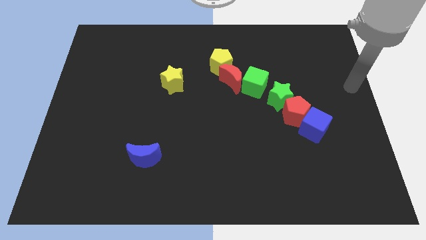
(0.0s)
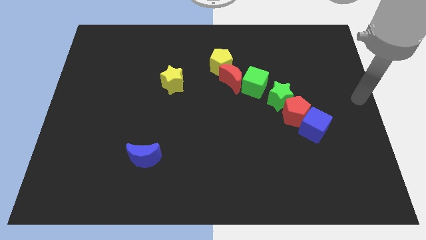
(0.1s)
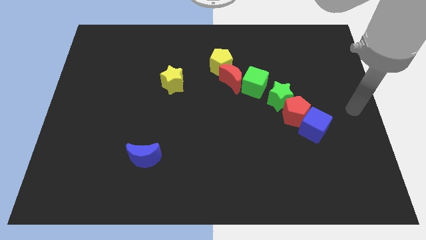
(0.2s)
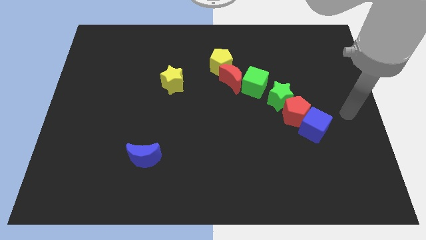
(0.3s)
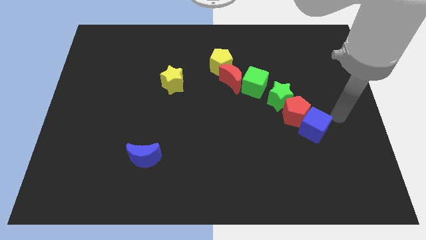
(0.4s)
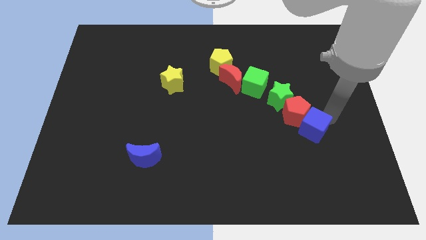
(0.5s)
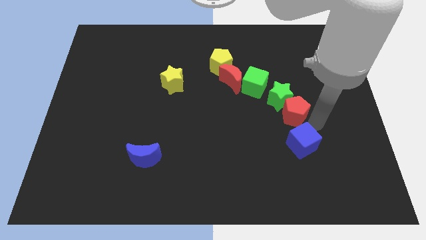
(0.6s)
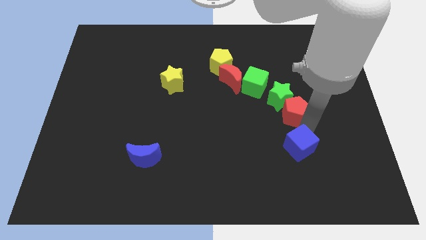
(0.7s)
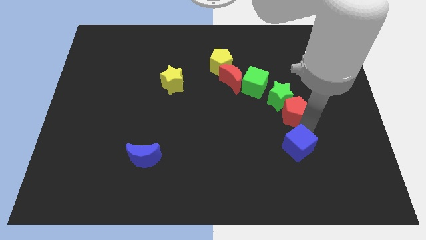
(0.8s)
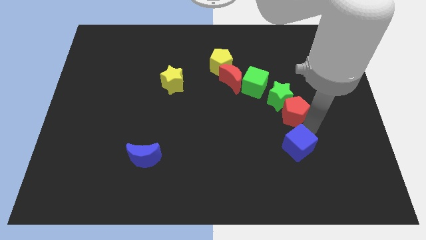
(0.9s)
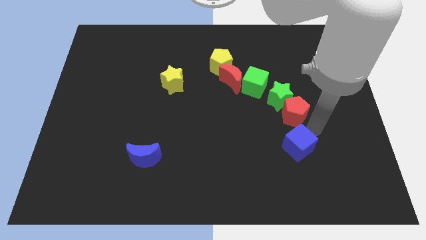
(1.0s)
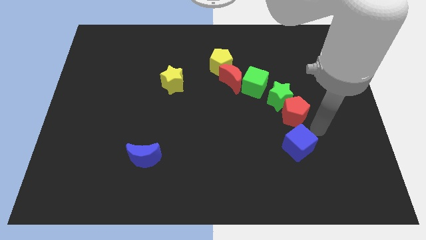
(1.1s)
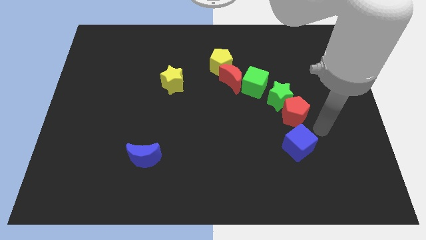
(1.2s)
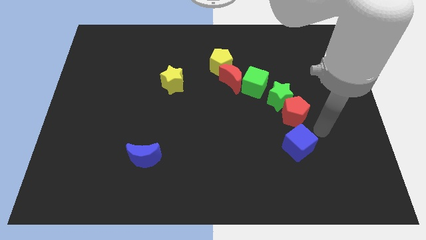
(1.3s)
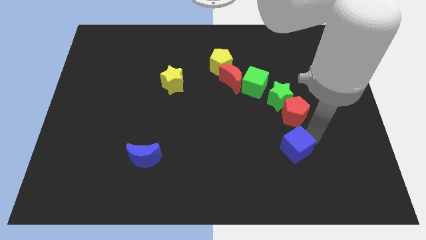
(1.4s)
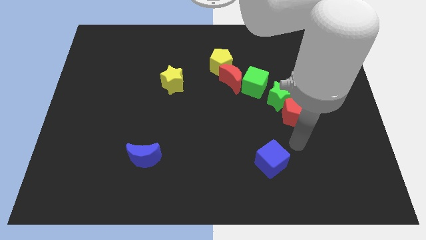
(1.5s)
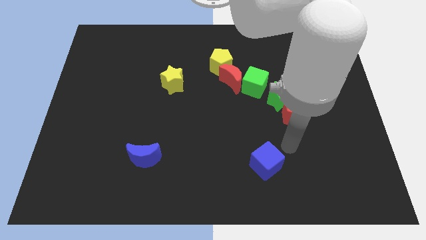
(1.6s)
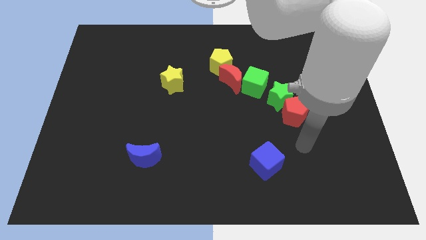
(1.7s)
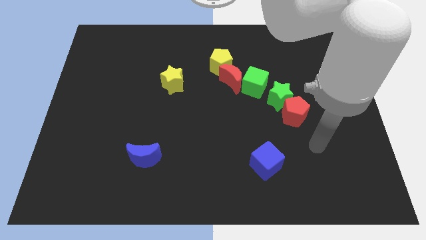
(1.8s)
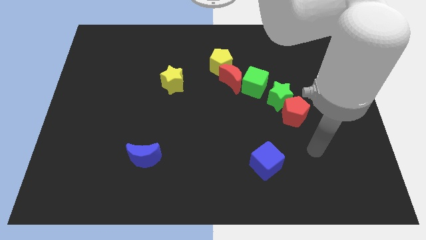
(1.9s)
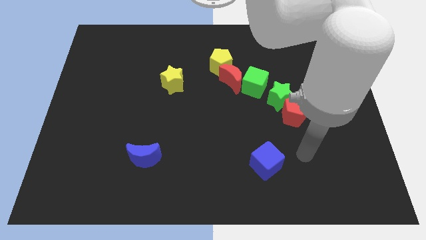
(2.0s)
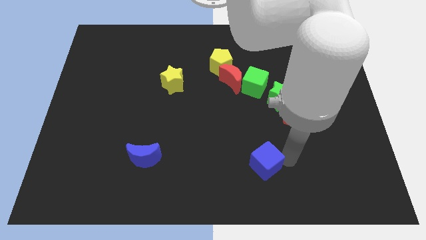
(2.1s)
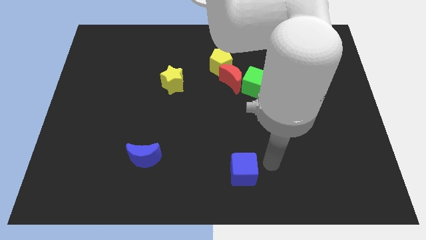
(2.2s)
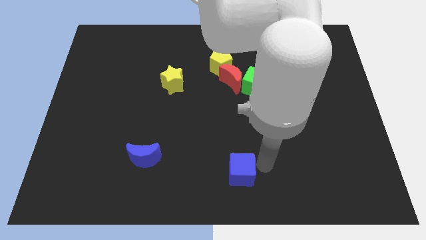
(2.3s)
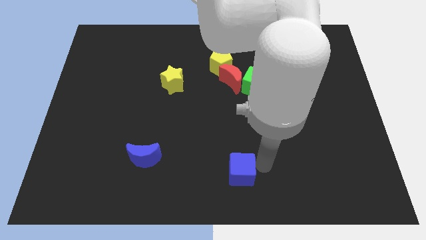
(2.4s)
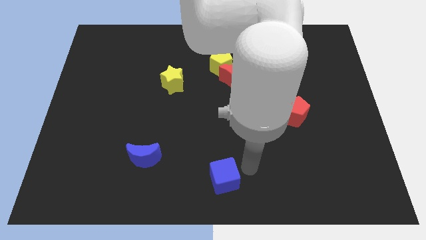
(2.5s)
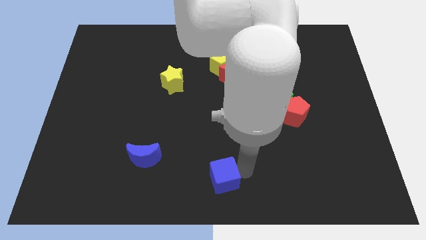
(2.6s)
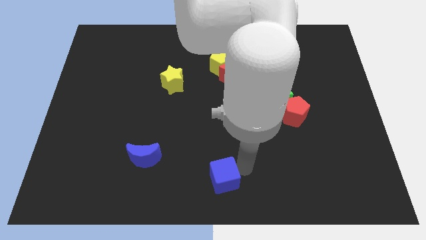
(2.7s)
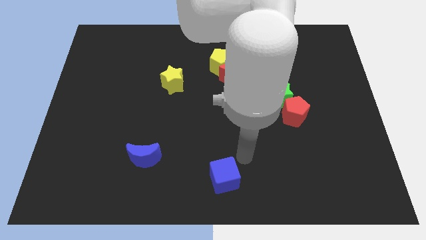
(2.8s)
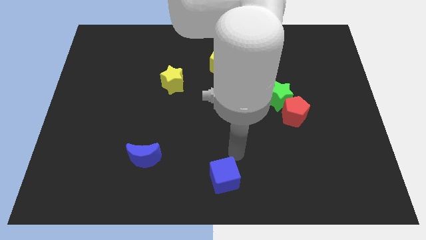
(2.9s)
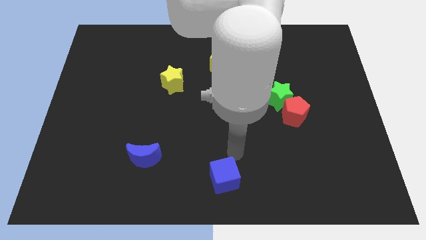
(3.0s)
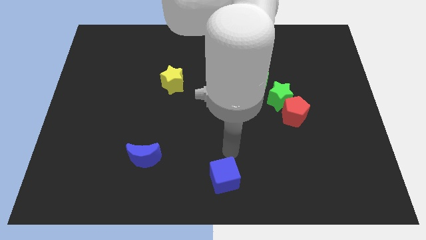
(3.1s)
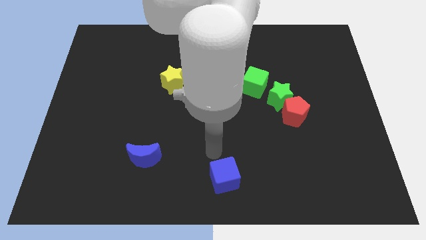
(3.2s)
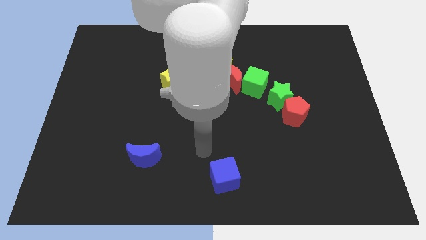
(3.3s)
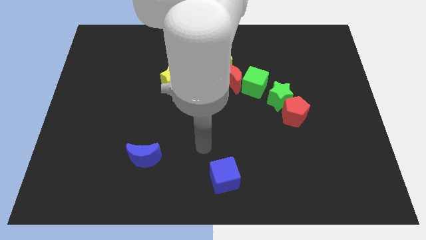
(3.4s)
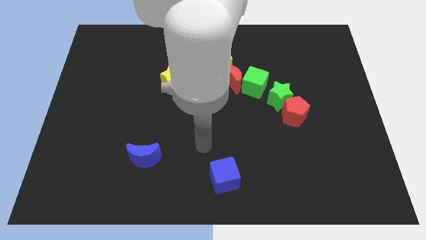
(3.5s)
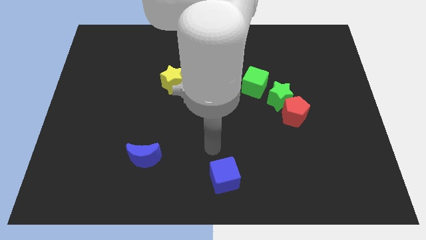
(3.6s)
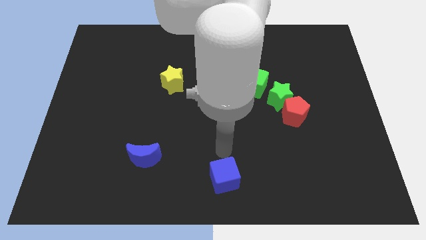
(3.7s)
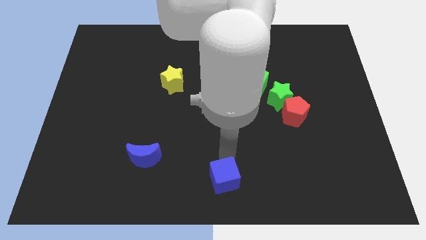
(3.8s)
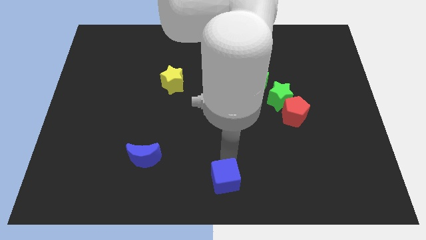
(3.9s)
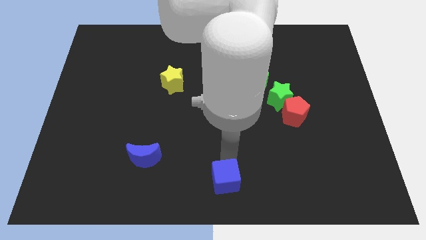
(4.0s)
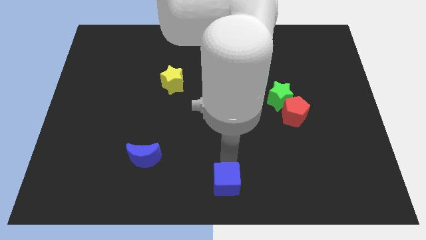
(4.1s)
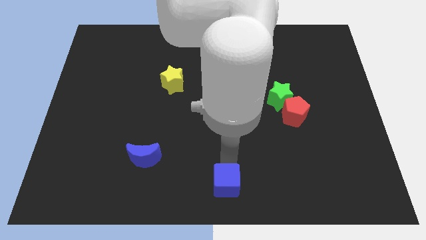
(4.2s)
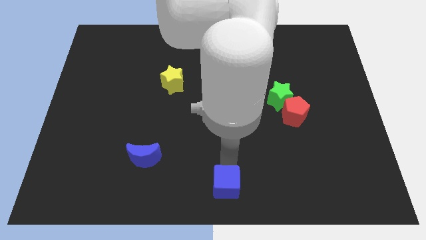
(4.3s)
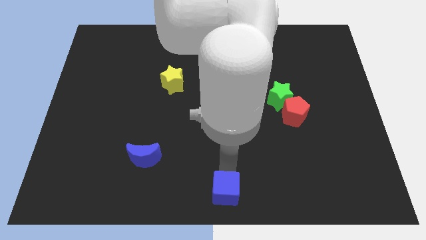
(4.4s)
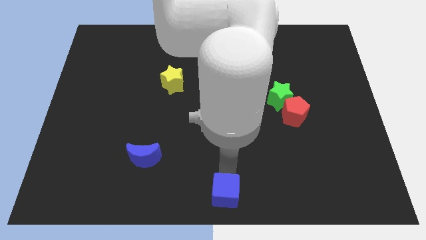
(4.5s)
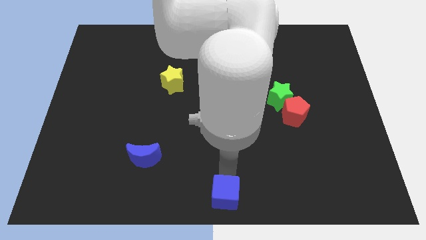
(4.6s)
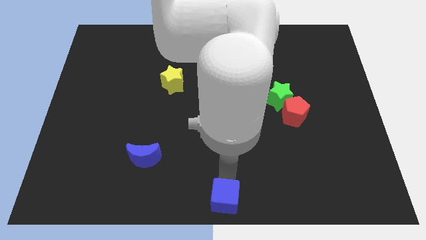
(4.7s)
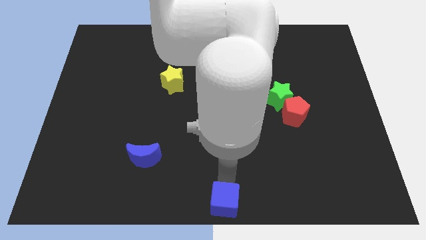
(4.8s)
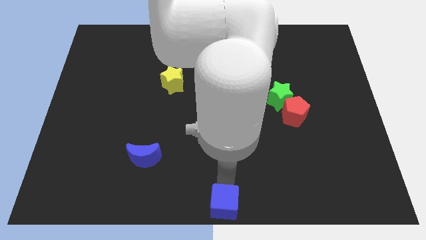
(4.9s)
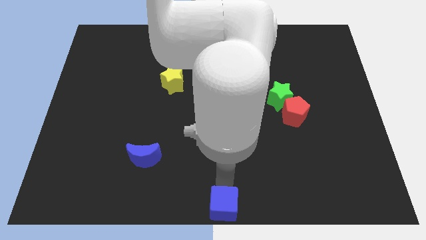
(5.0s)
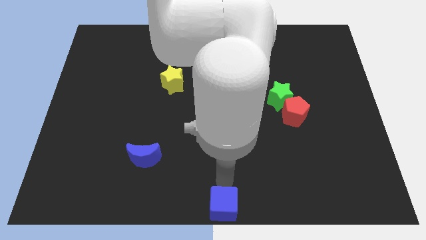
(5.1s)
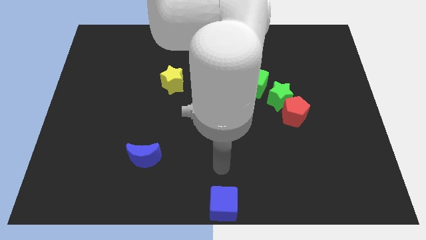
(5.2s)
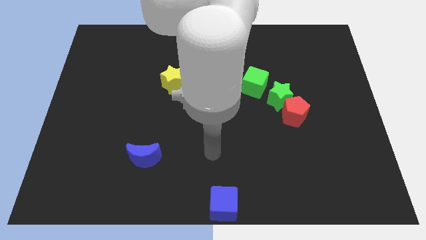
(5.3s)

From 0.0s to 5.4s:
push the blue cube to the bottom center of the board

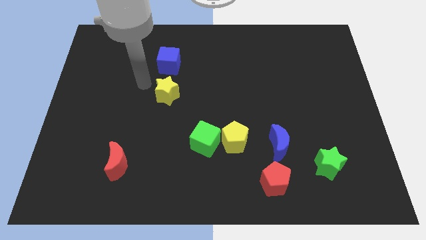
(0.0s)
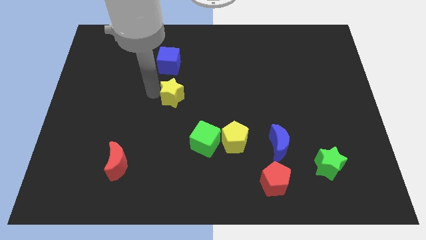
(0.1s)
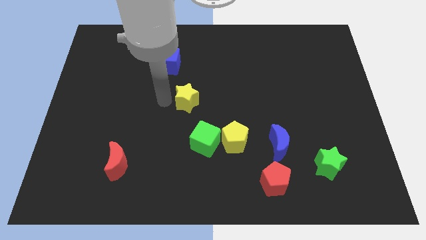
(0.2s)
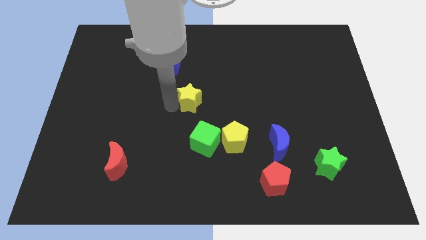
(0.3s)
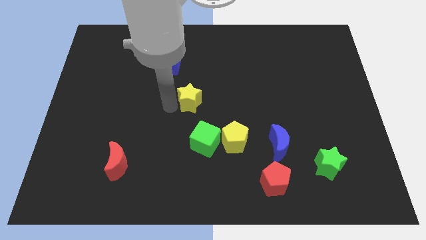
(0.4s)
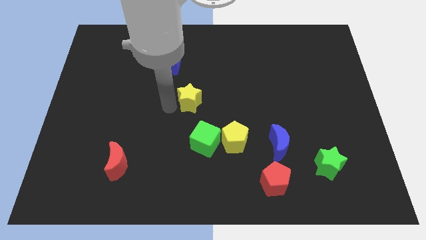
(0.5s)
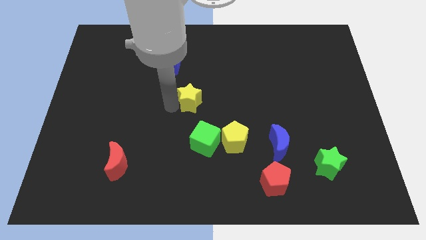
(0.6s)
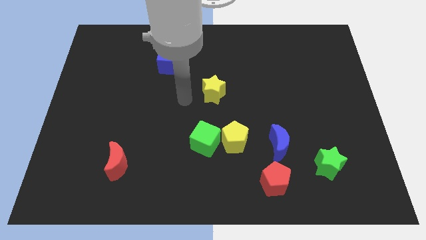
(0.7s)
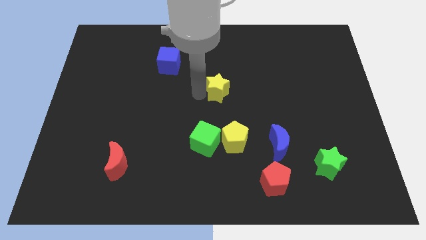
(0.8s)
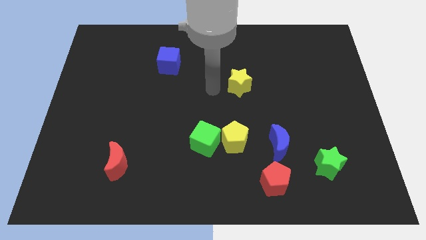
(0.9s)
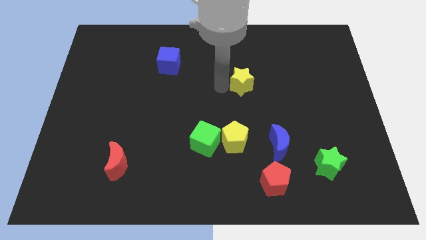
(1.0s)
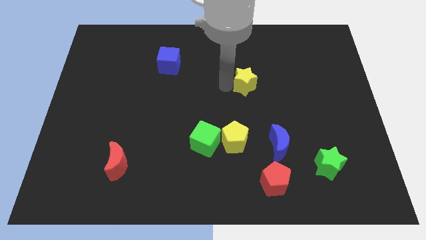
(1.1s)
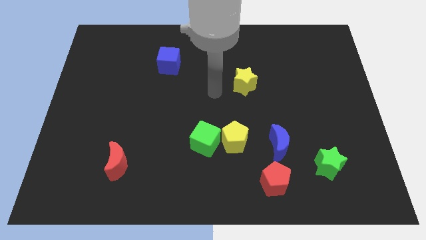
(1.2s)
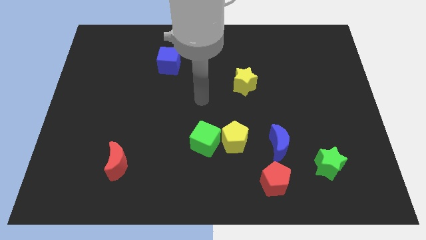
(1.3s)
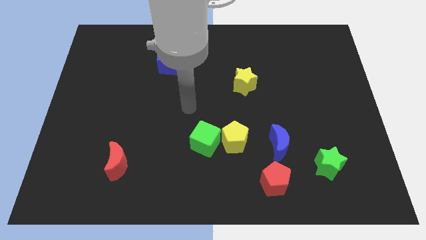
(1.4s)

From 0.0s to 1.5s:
push yellow star towards the right side of the board

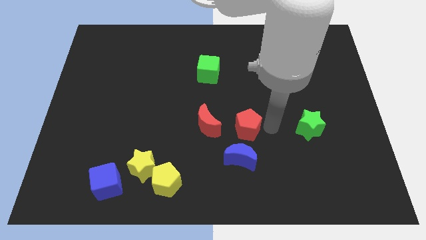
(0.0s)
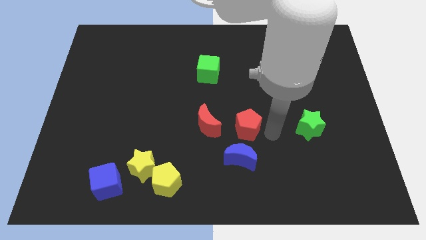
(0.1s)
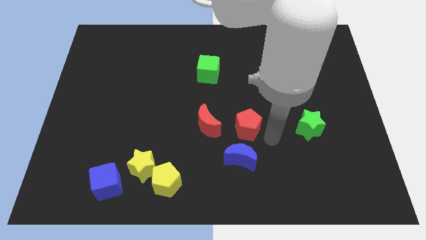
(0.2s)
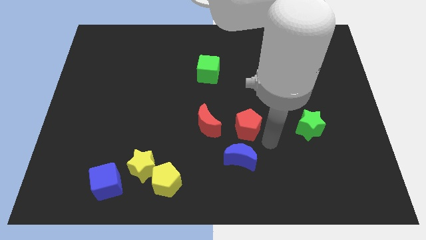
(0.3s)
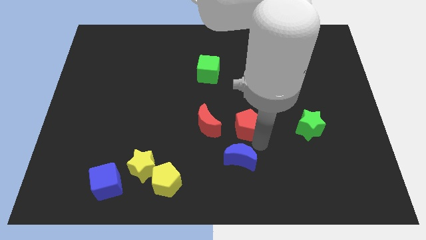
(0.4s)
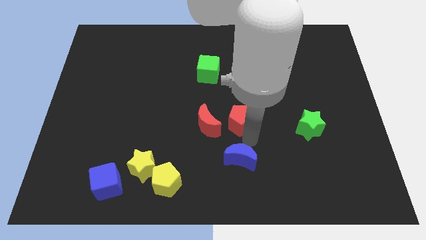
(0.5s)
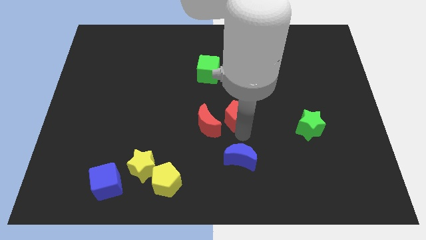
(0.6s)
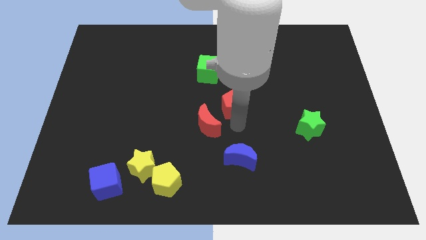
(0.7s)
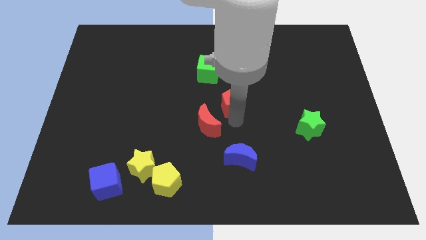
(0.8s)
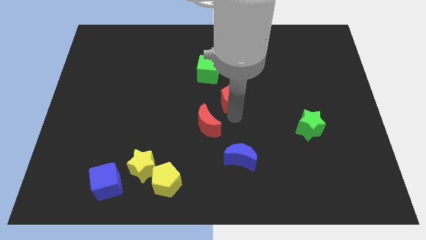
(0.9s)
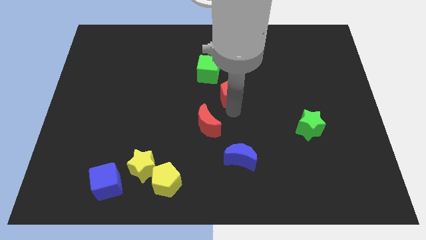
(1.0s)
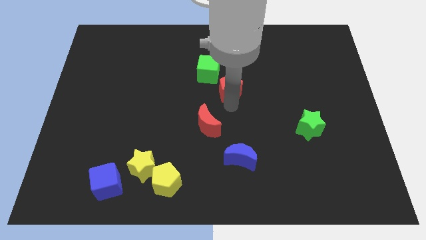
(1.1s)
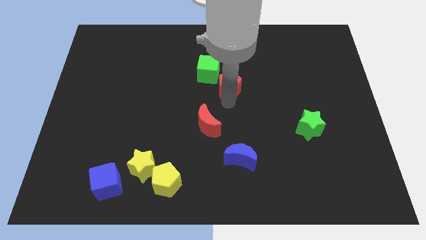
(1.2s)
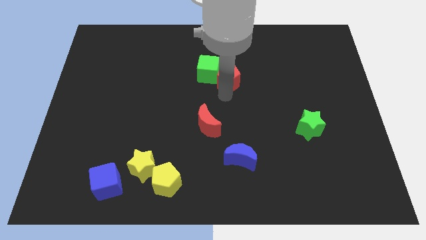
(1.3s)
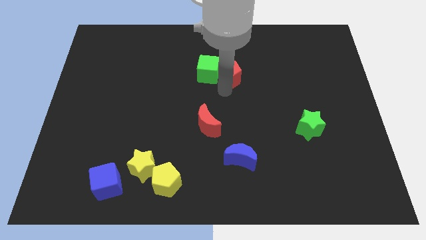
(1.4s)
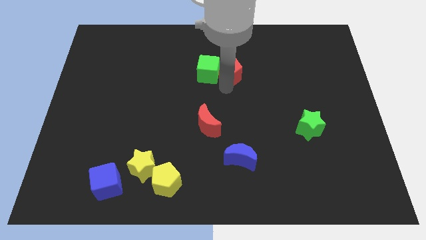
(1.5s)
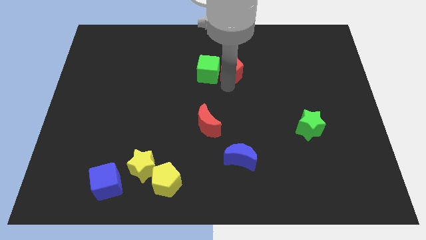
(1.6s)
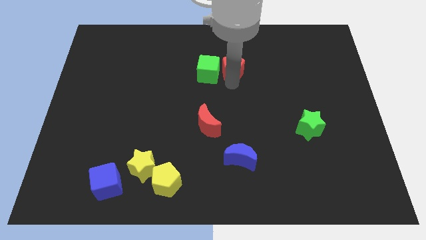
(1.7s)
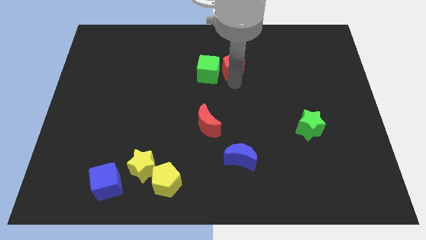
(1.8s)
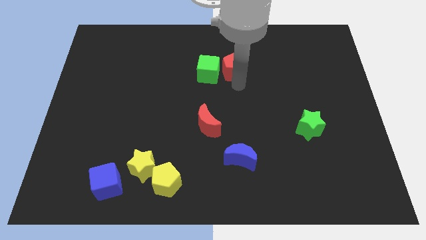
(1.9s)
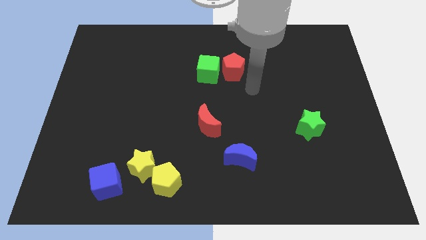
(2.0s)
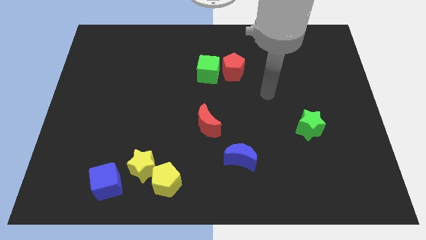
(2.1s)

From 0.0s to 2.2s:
push red pentagon towards the green cube
